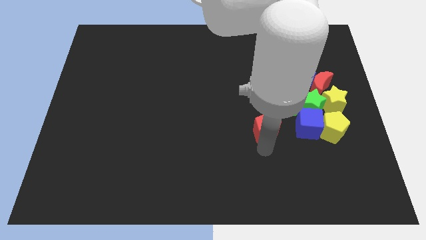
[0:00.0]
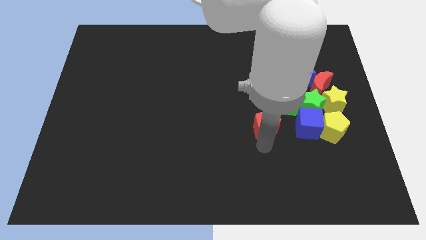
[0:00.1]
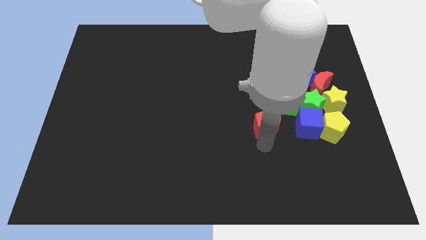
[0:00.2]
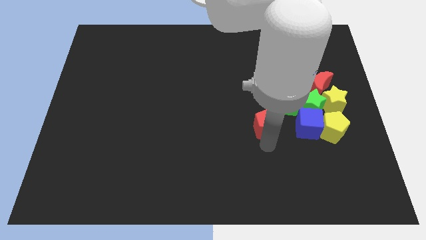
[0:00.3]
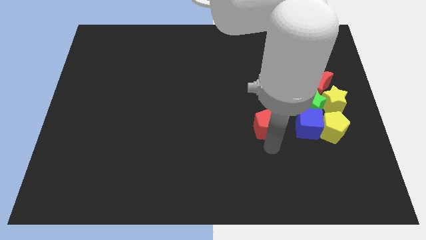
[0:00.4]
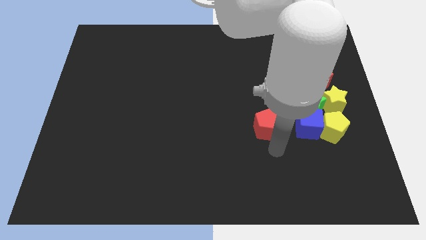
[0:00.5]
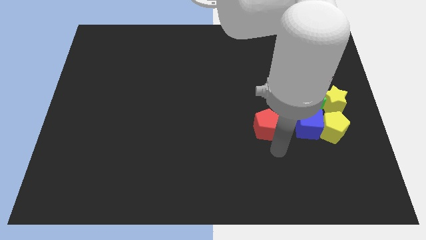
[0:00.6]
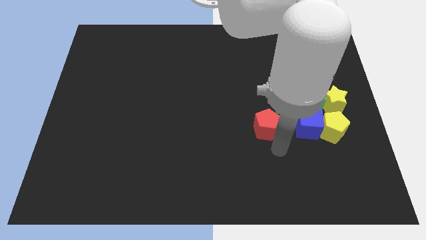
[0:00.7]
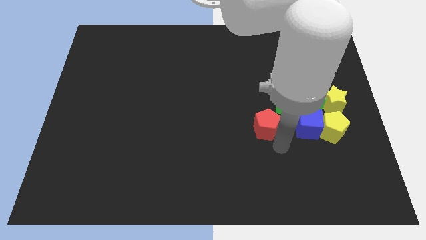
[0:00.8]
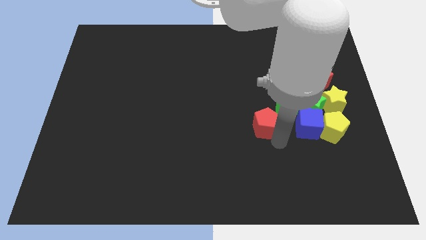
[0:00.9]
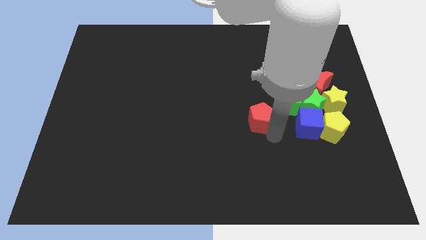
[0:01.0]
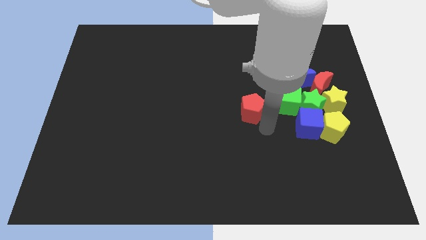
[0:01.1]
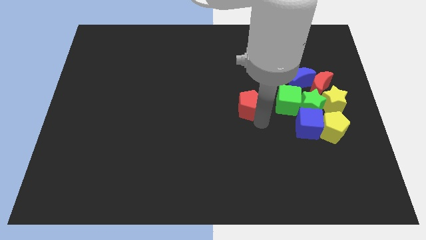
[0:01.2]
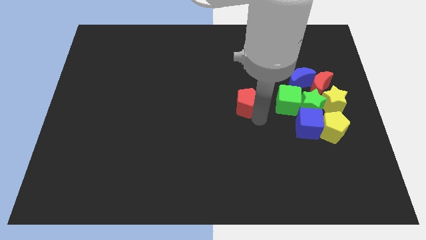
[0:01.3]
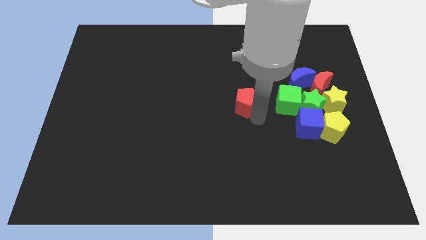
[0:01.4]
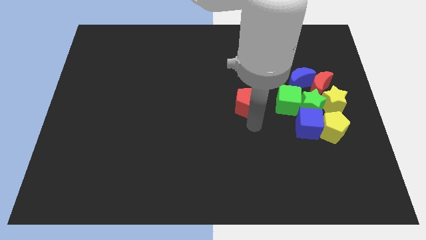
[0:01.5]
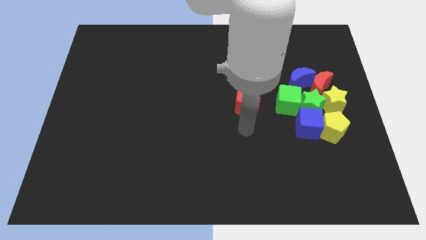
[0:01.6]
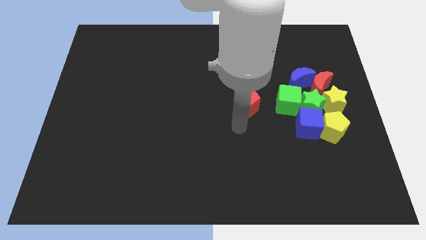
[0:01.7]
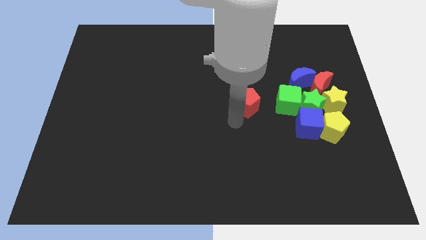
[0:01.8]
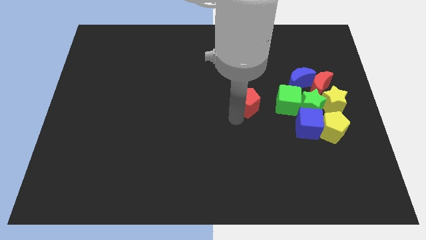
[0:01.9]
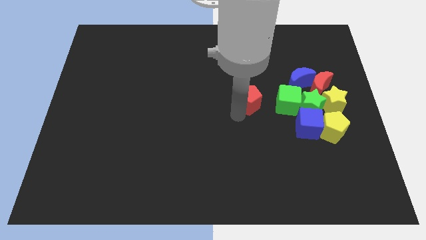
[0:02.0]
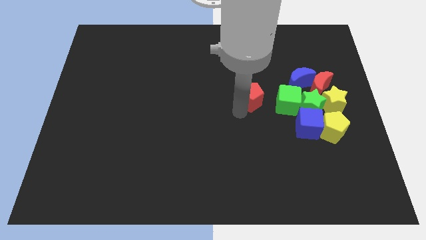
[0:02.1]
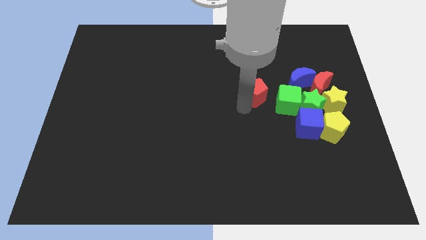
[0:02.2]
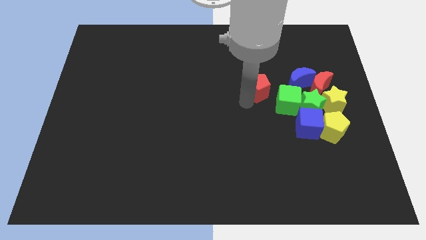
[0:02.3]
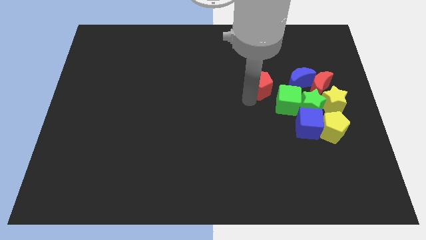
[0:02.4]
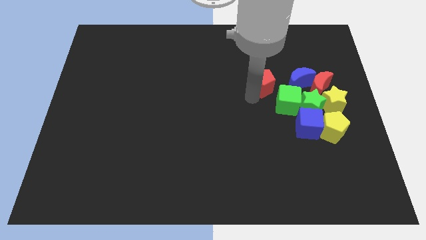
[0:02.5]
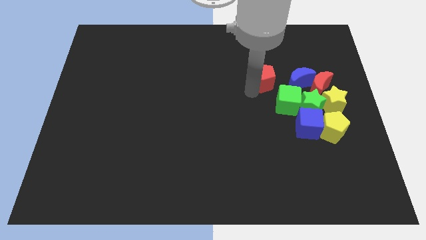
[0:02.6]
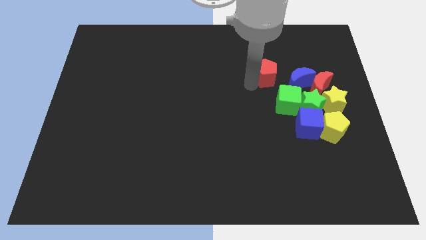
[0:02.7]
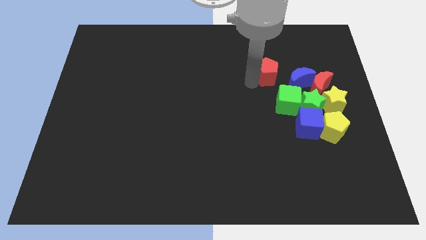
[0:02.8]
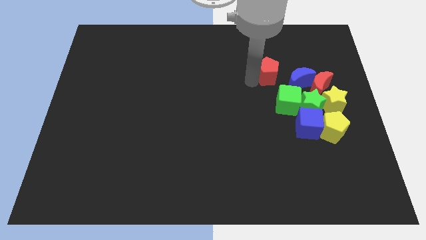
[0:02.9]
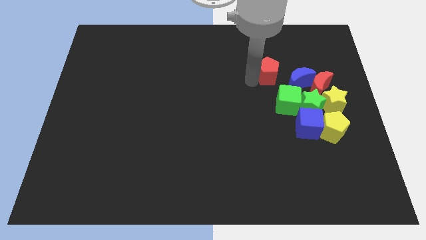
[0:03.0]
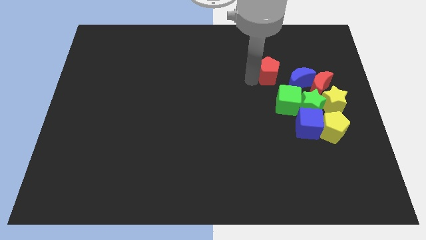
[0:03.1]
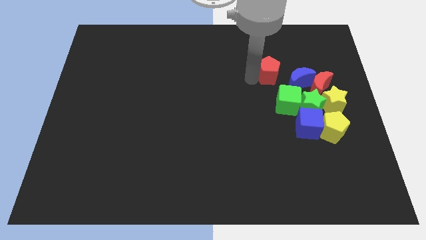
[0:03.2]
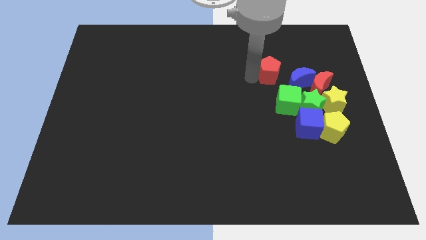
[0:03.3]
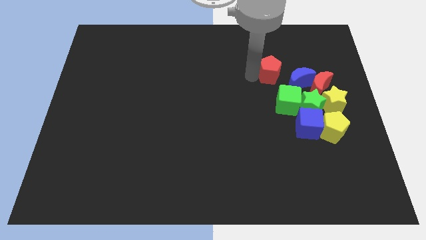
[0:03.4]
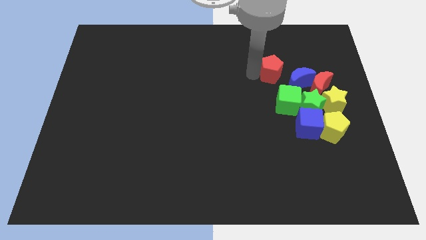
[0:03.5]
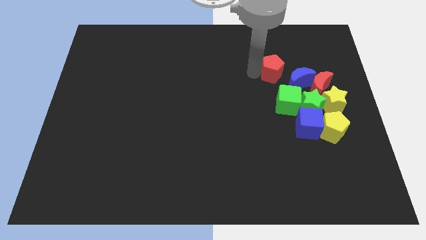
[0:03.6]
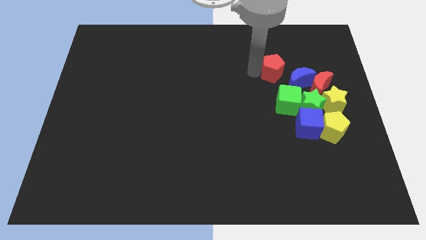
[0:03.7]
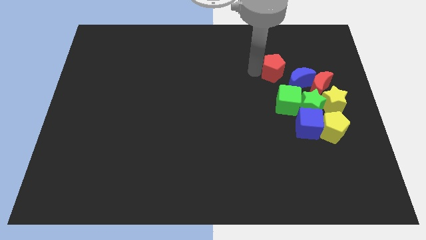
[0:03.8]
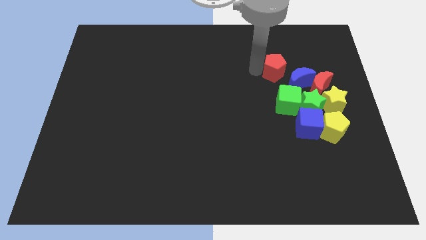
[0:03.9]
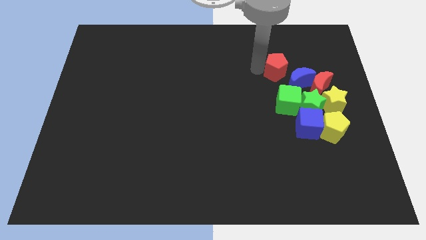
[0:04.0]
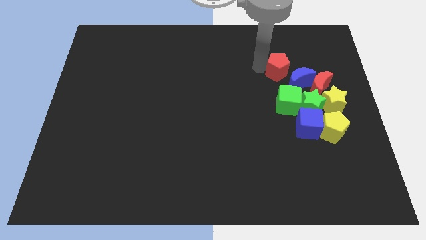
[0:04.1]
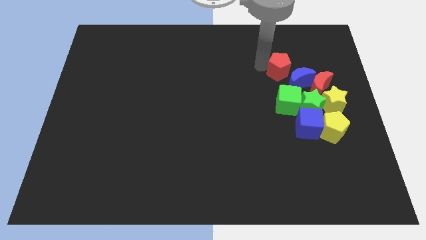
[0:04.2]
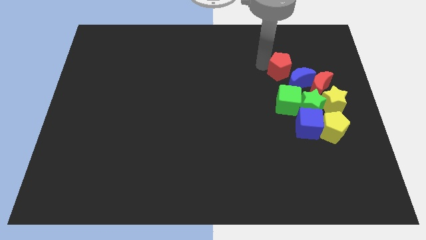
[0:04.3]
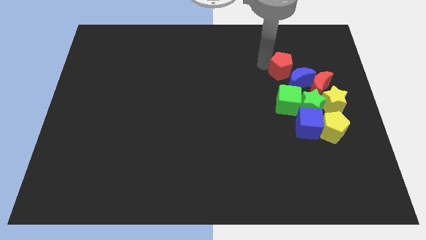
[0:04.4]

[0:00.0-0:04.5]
move the red pentagon close to the blue moon

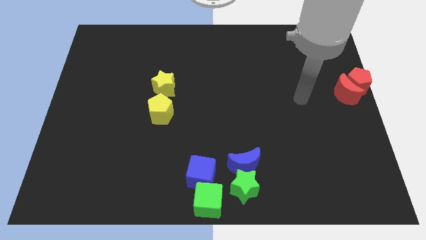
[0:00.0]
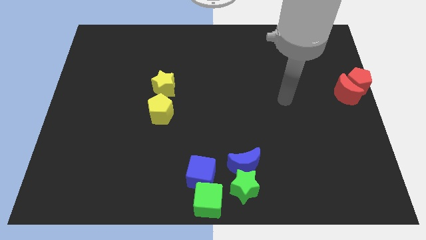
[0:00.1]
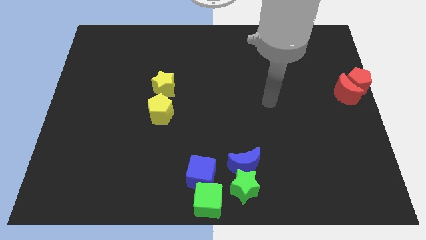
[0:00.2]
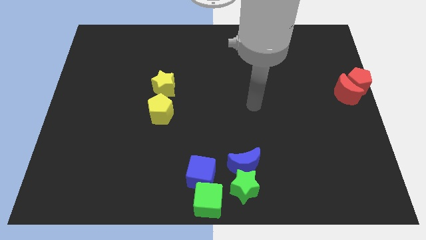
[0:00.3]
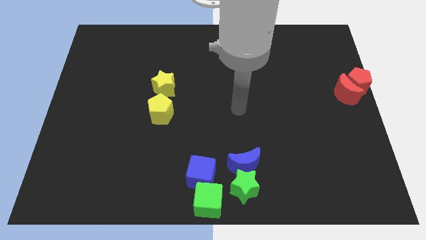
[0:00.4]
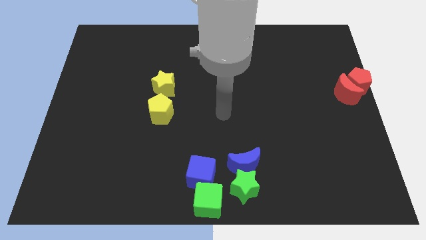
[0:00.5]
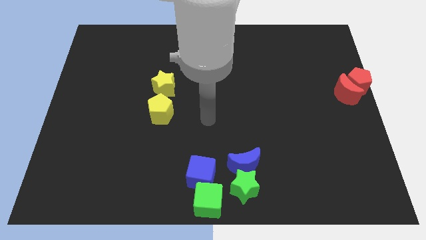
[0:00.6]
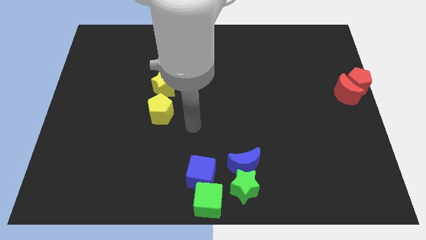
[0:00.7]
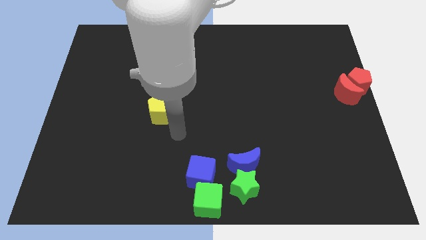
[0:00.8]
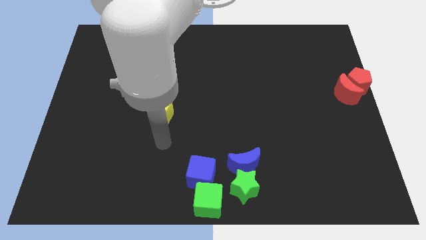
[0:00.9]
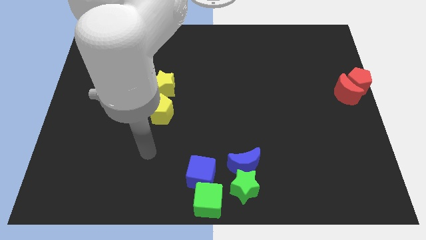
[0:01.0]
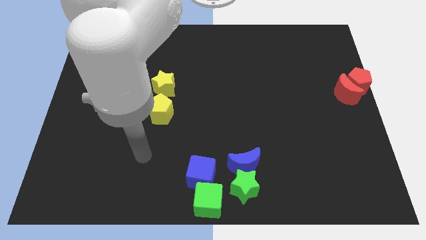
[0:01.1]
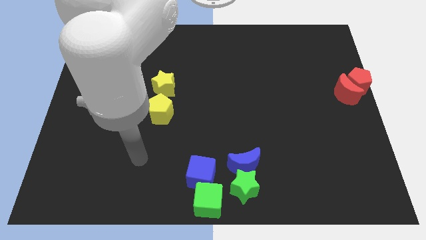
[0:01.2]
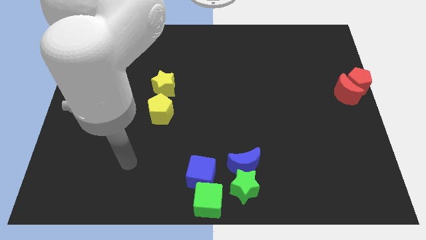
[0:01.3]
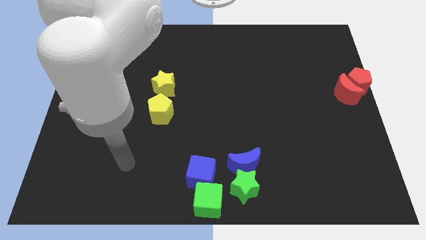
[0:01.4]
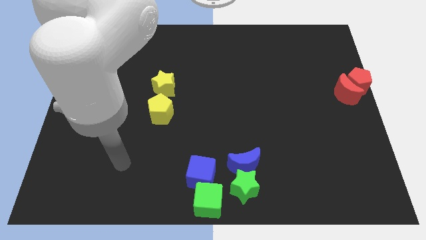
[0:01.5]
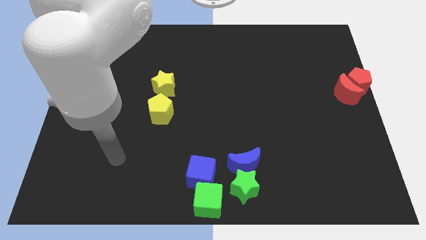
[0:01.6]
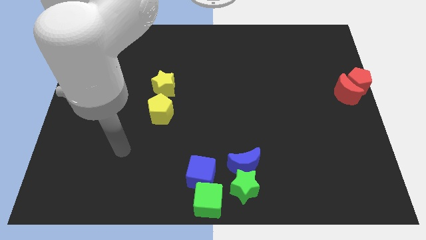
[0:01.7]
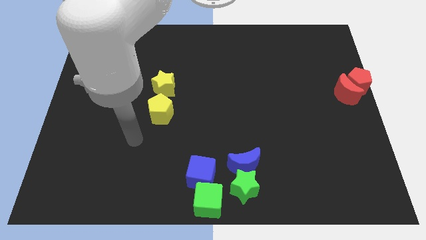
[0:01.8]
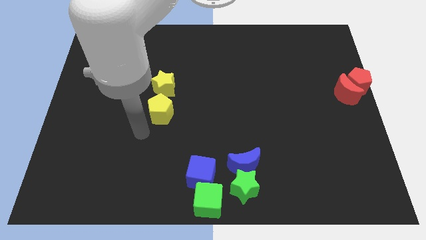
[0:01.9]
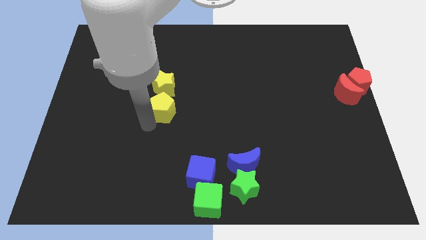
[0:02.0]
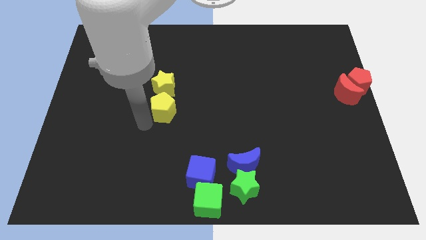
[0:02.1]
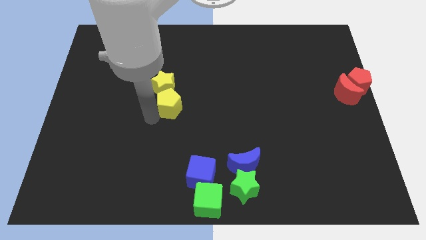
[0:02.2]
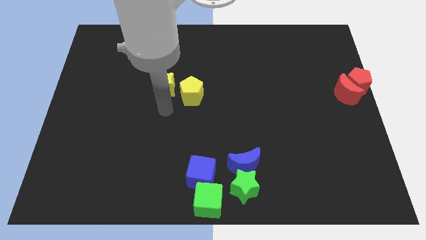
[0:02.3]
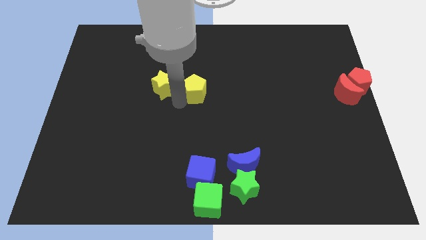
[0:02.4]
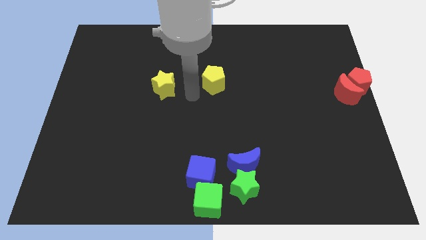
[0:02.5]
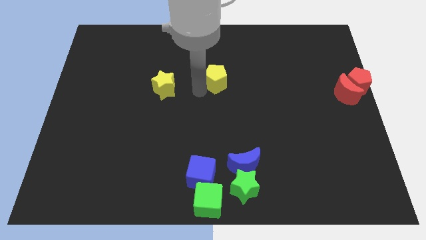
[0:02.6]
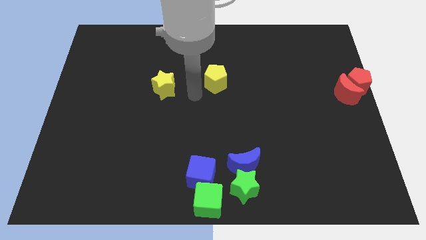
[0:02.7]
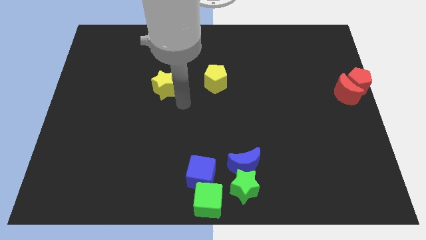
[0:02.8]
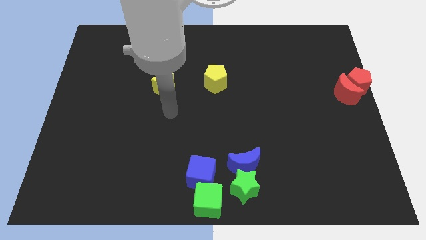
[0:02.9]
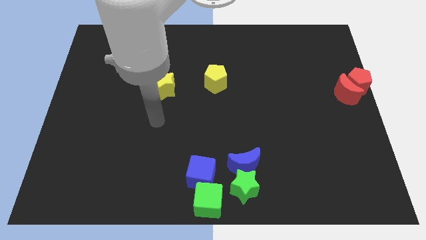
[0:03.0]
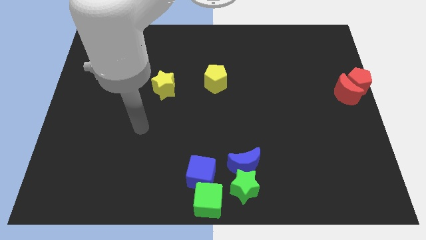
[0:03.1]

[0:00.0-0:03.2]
move the yellow pentagon right to the yellow star

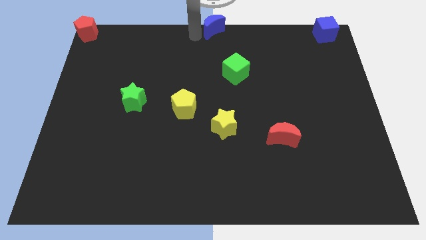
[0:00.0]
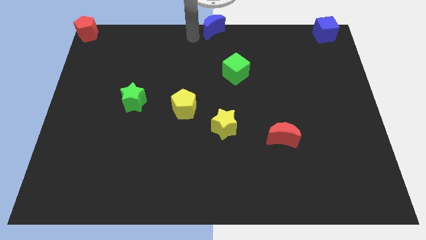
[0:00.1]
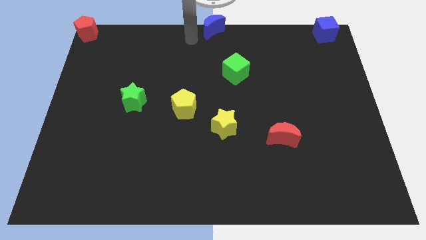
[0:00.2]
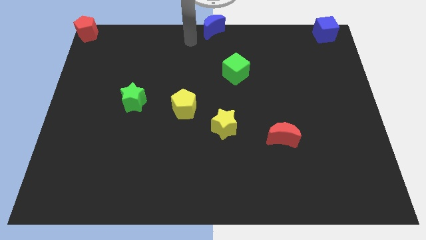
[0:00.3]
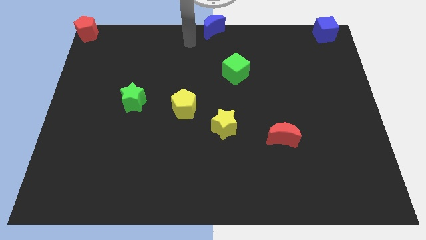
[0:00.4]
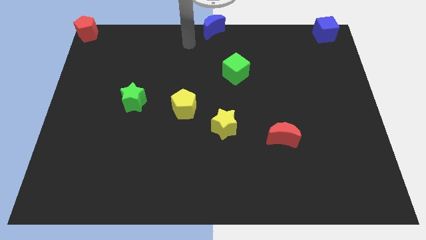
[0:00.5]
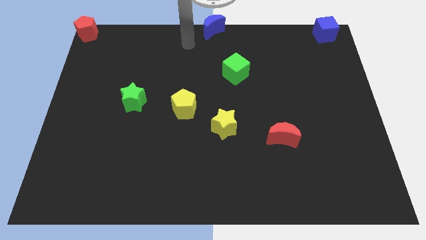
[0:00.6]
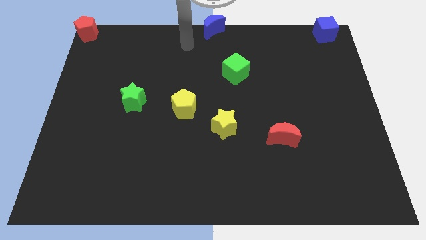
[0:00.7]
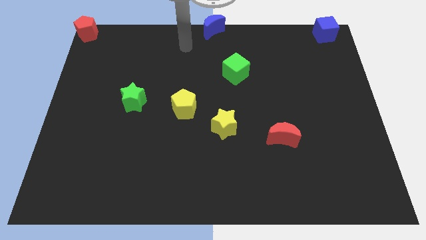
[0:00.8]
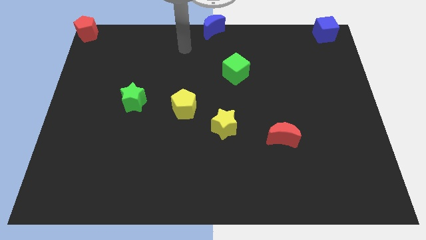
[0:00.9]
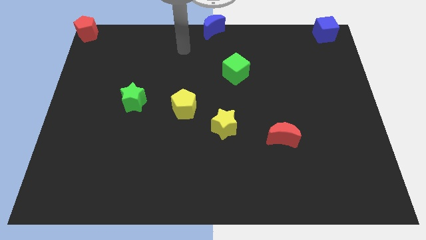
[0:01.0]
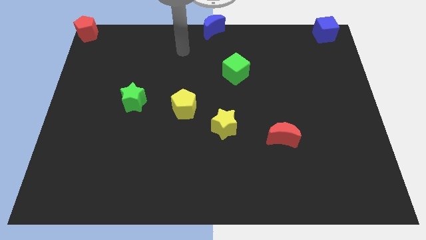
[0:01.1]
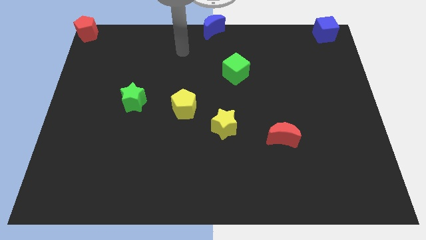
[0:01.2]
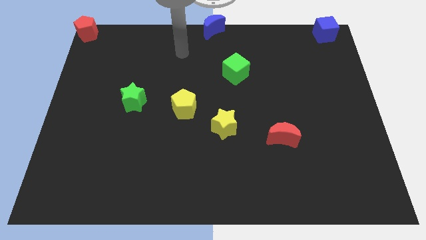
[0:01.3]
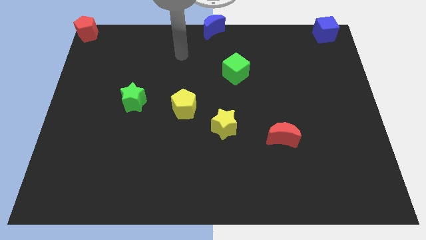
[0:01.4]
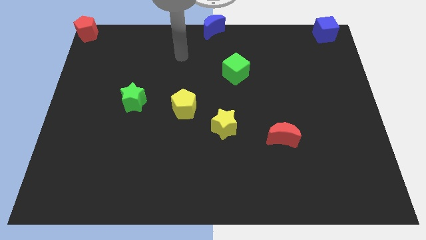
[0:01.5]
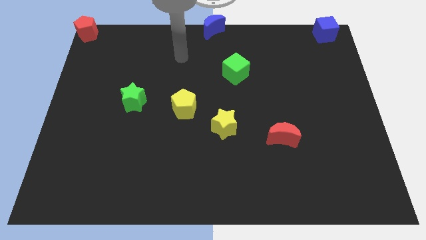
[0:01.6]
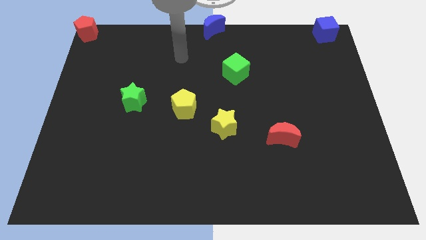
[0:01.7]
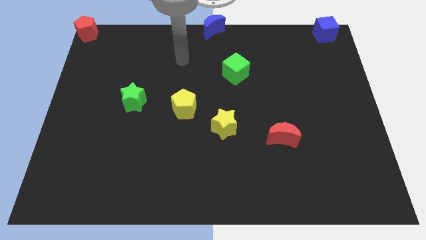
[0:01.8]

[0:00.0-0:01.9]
move your arm away from blue moon
